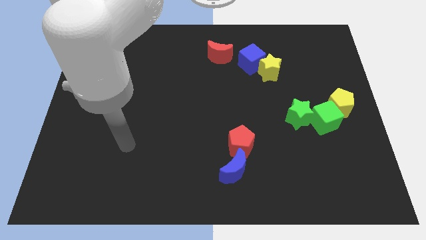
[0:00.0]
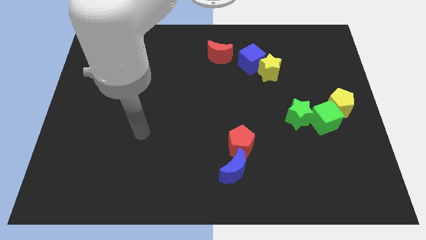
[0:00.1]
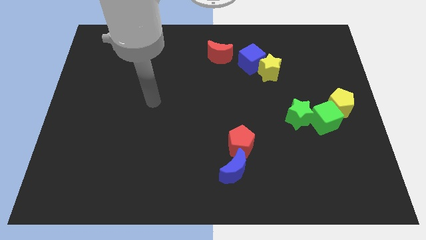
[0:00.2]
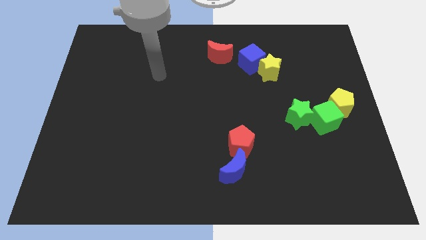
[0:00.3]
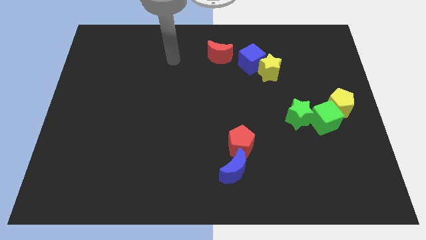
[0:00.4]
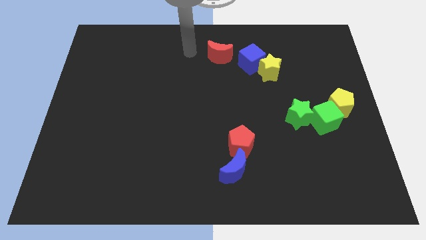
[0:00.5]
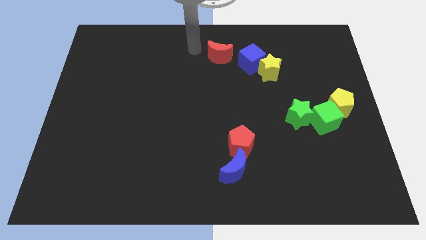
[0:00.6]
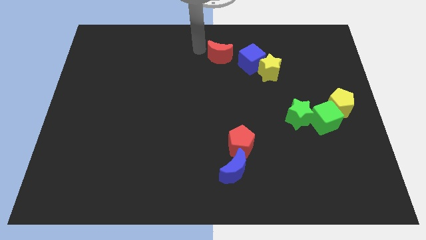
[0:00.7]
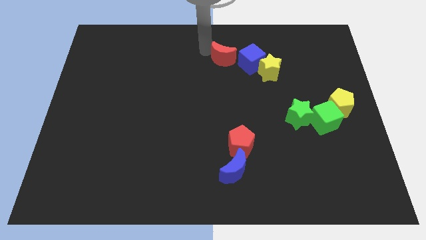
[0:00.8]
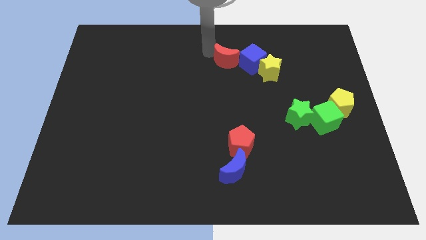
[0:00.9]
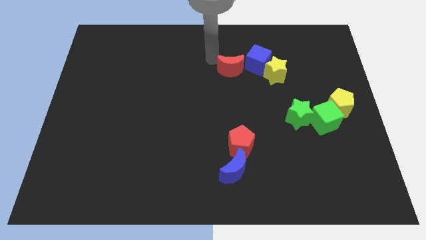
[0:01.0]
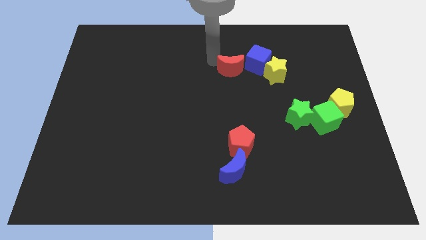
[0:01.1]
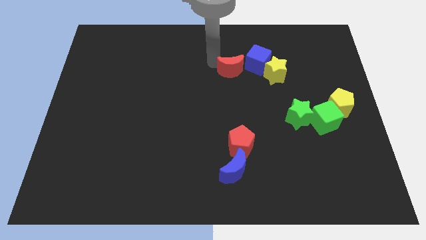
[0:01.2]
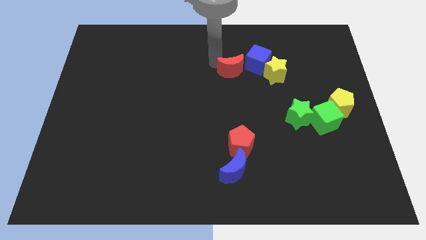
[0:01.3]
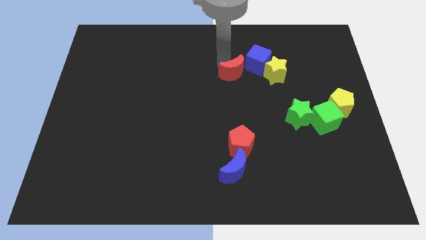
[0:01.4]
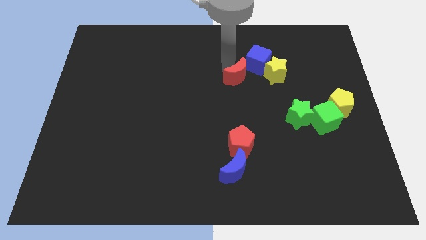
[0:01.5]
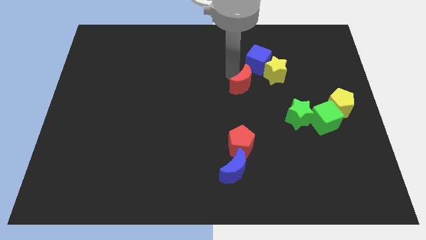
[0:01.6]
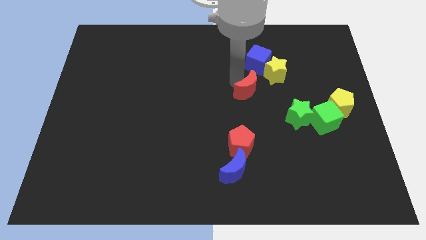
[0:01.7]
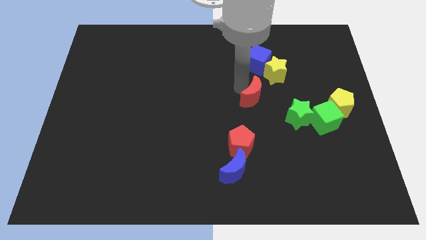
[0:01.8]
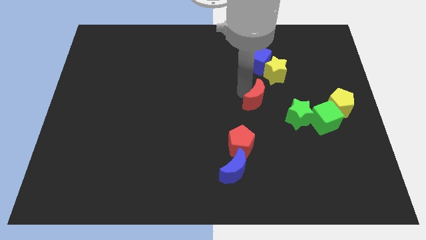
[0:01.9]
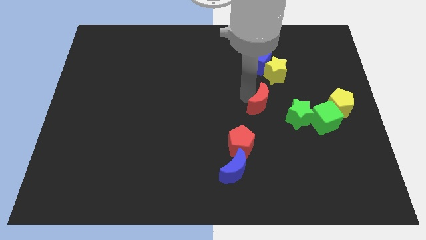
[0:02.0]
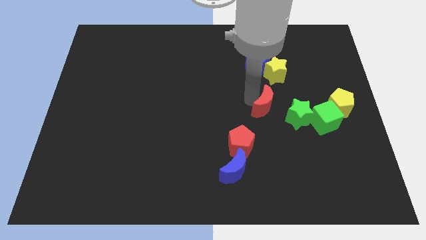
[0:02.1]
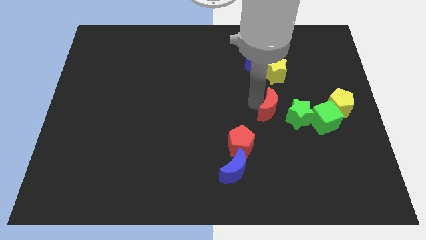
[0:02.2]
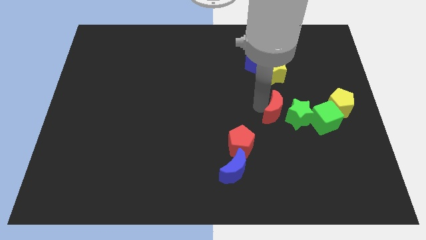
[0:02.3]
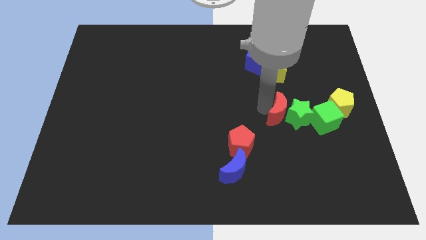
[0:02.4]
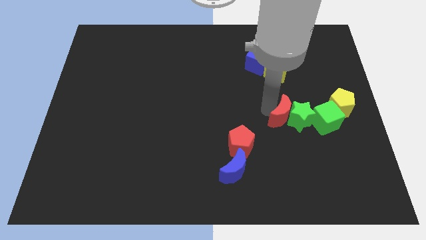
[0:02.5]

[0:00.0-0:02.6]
move the red moon to the green star

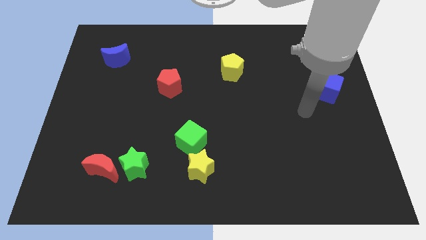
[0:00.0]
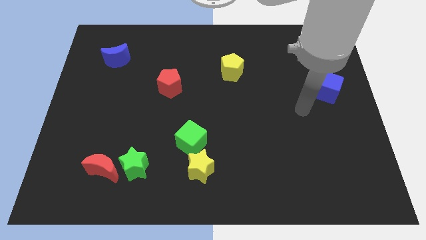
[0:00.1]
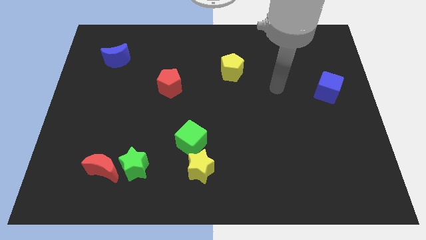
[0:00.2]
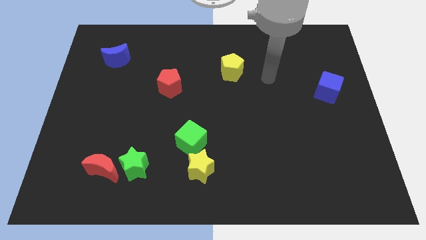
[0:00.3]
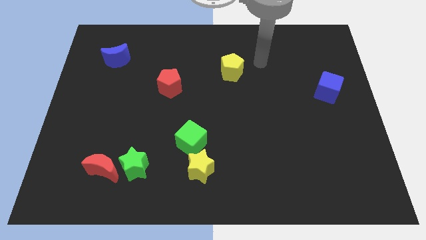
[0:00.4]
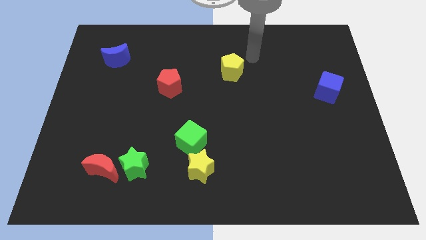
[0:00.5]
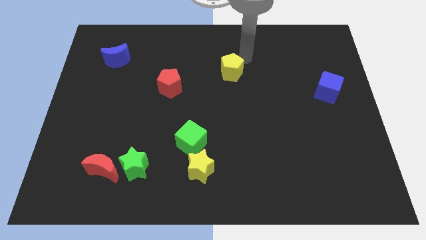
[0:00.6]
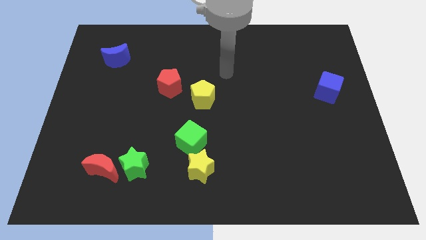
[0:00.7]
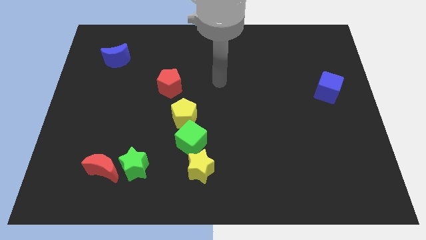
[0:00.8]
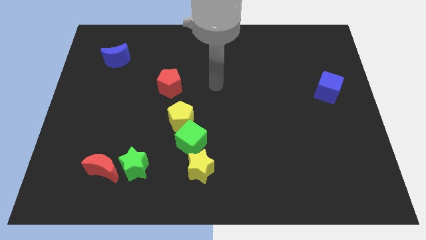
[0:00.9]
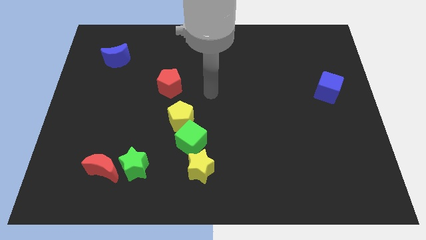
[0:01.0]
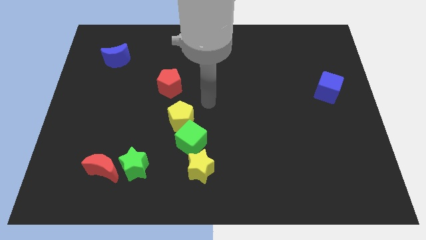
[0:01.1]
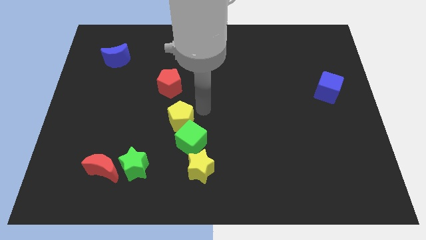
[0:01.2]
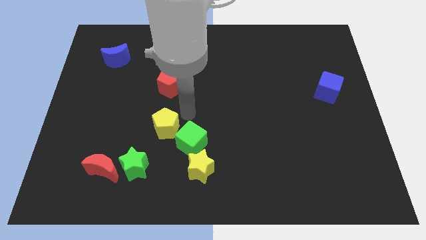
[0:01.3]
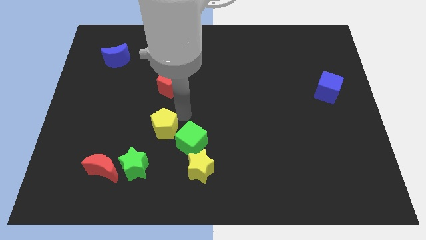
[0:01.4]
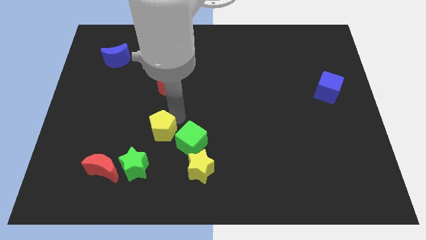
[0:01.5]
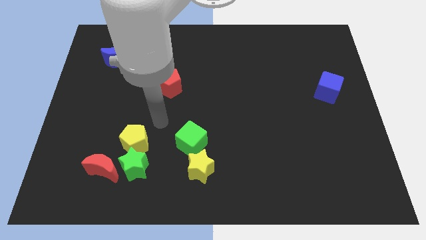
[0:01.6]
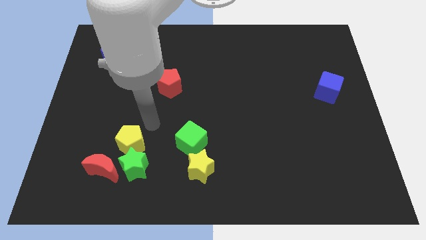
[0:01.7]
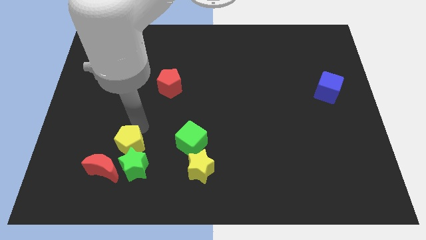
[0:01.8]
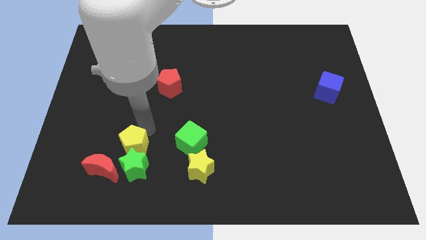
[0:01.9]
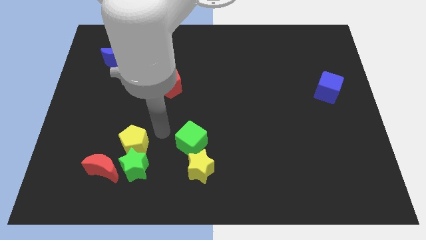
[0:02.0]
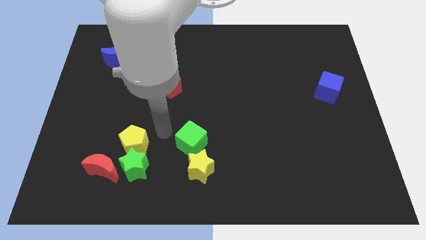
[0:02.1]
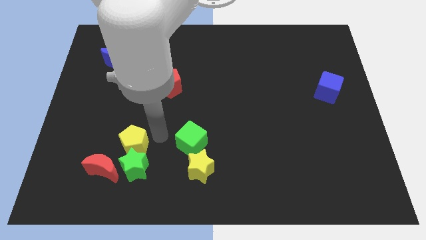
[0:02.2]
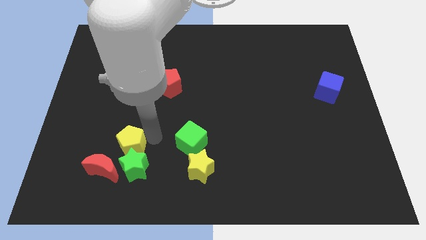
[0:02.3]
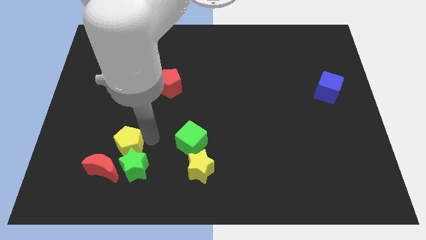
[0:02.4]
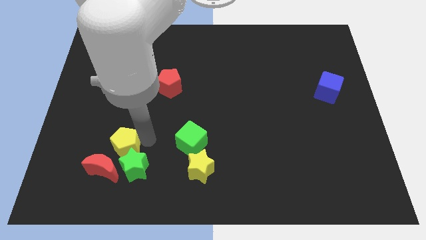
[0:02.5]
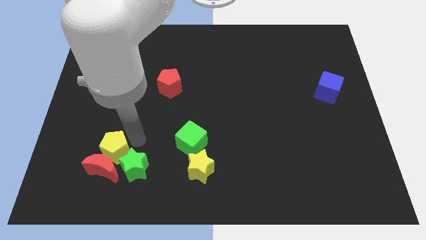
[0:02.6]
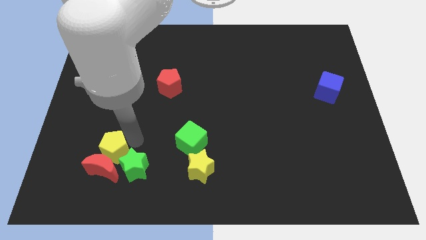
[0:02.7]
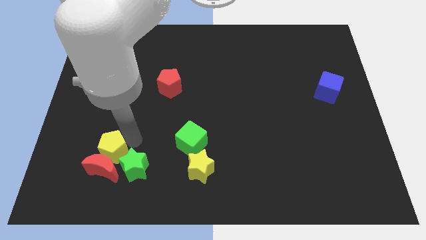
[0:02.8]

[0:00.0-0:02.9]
push the yellow pentagon to the red moon

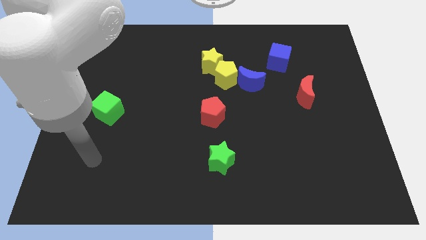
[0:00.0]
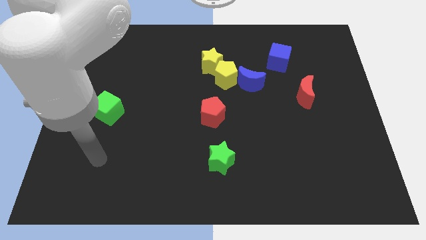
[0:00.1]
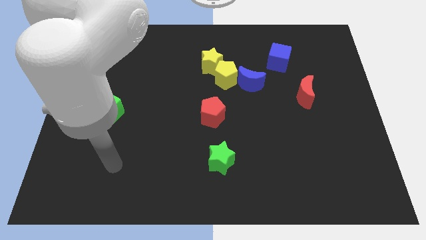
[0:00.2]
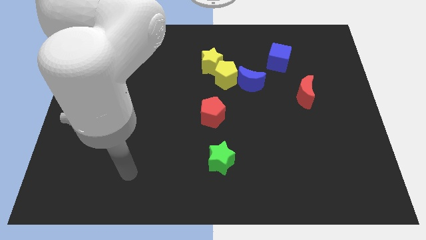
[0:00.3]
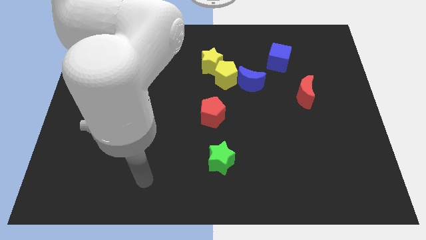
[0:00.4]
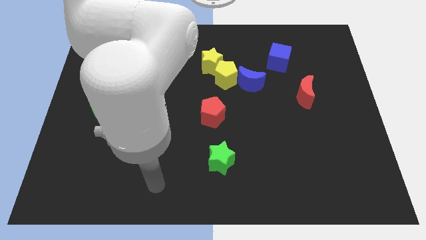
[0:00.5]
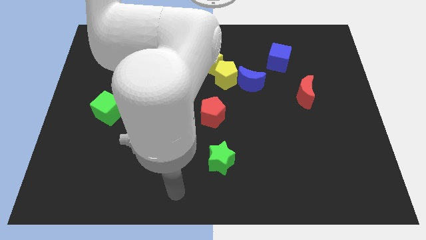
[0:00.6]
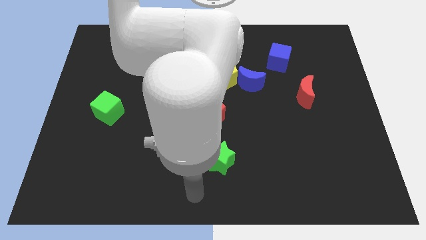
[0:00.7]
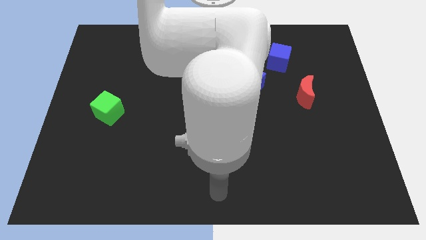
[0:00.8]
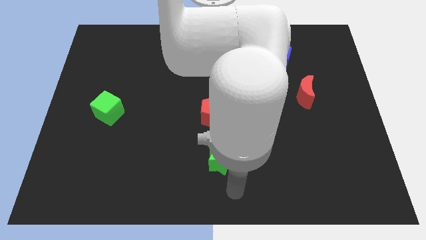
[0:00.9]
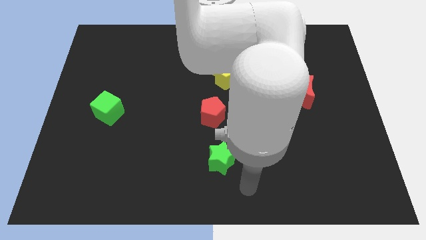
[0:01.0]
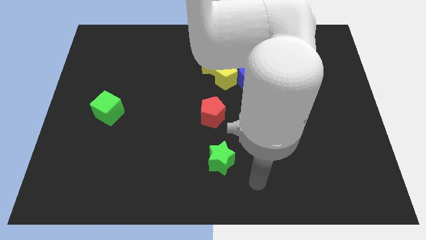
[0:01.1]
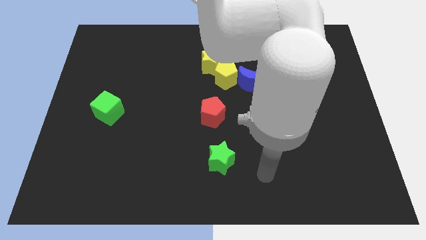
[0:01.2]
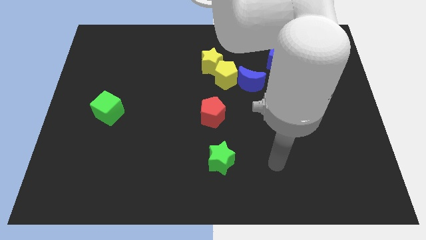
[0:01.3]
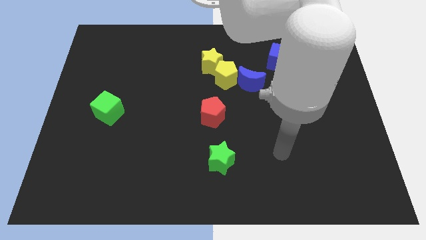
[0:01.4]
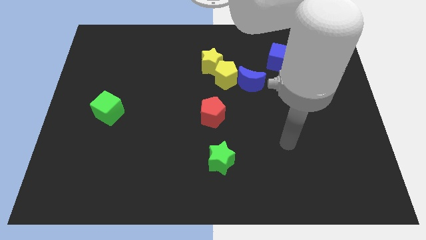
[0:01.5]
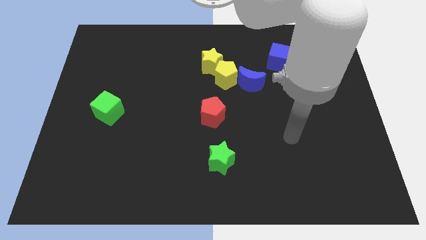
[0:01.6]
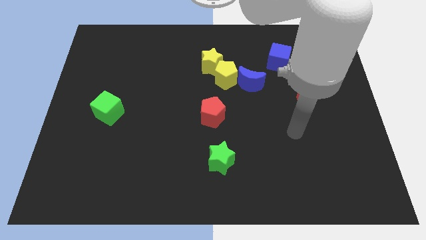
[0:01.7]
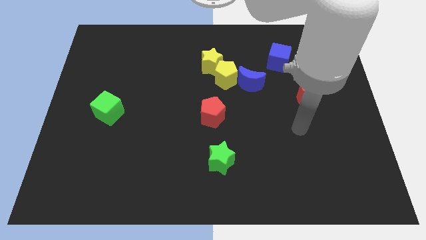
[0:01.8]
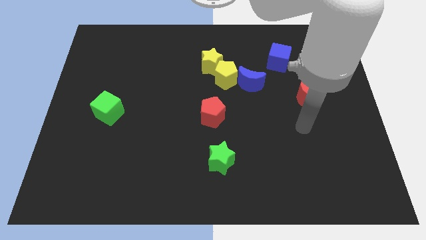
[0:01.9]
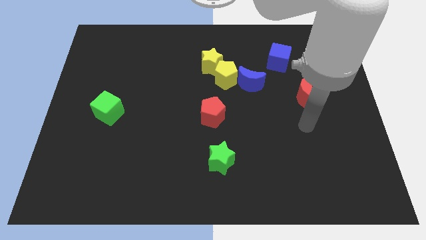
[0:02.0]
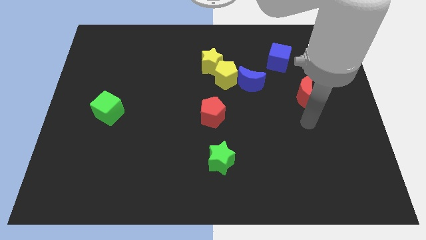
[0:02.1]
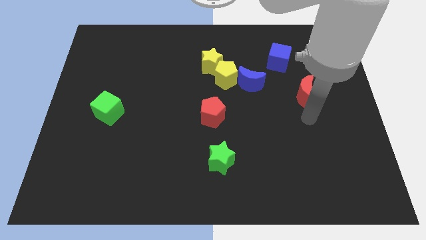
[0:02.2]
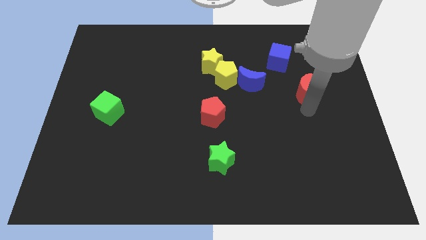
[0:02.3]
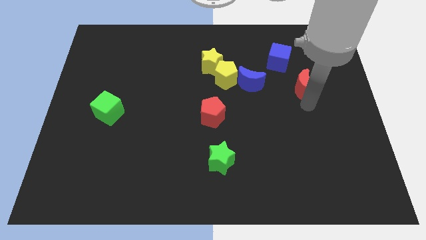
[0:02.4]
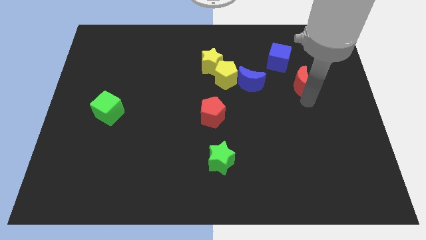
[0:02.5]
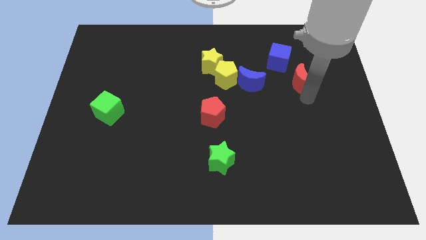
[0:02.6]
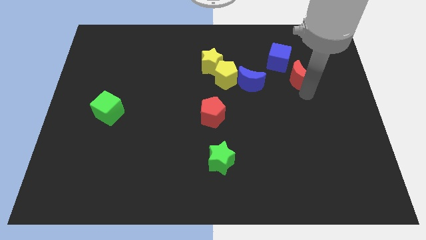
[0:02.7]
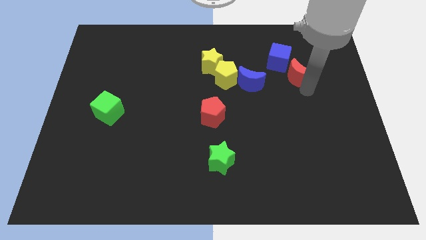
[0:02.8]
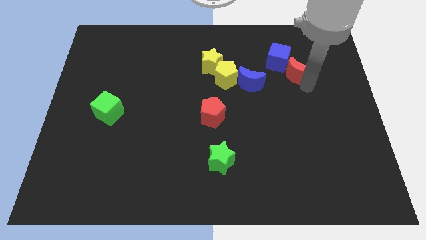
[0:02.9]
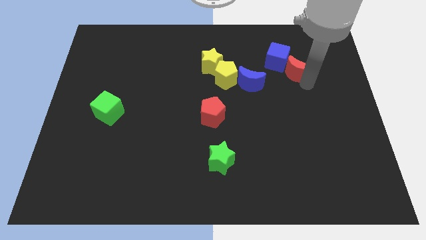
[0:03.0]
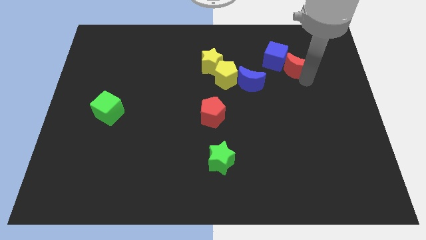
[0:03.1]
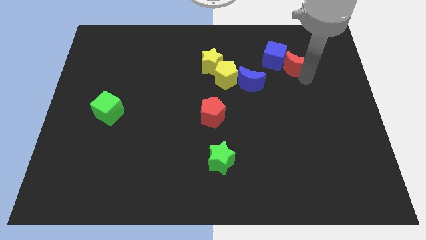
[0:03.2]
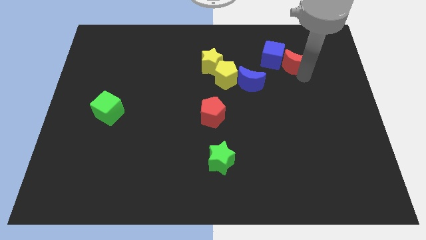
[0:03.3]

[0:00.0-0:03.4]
put the red moon close to the blue cube
